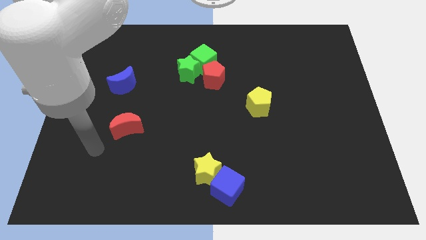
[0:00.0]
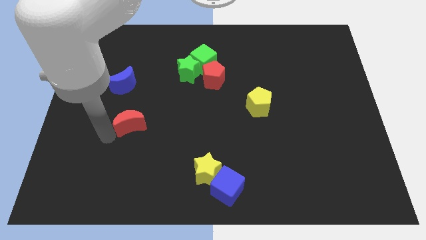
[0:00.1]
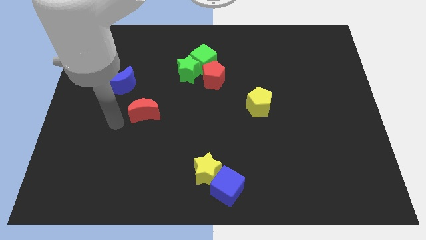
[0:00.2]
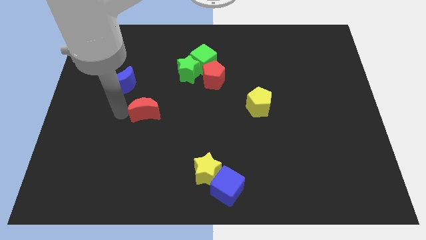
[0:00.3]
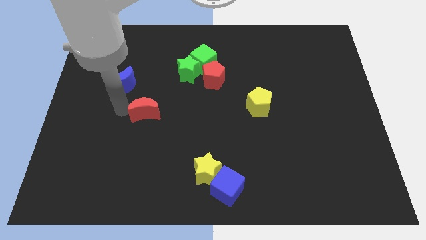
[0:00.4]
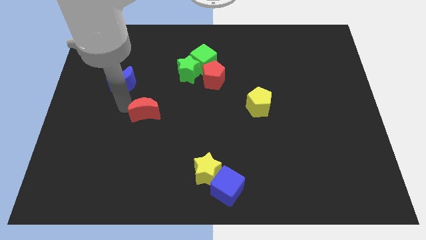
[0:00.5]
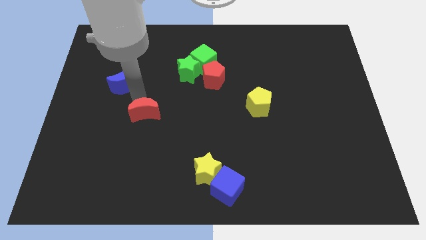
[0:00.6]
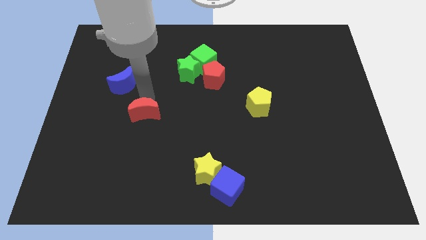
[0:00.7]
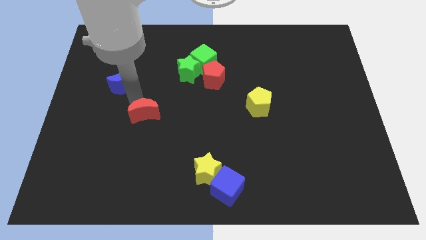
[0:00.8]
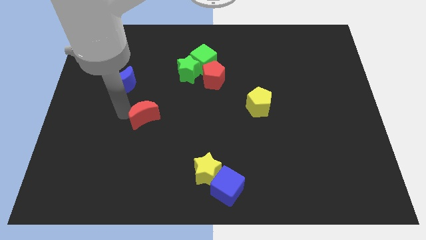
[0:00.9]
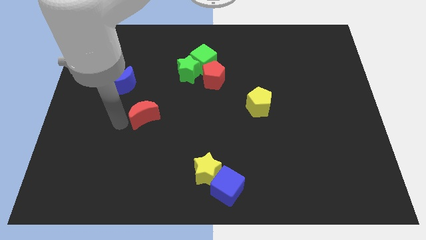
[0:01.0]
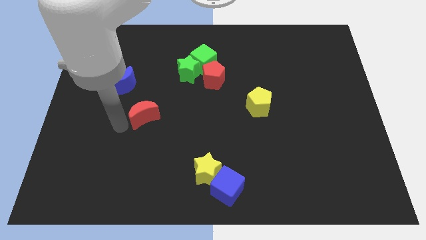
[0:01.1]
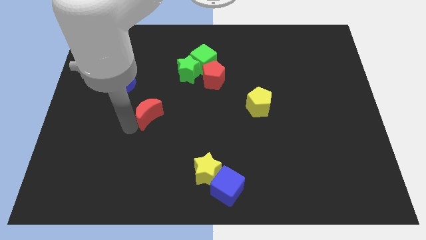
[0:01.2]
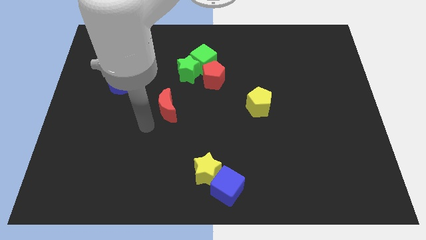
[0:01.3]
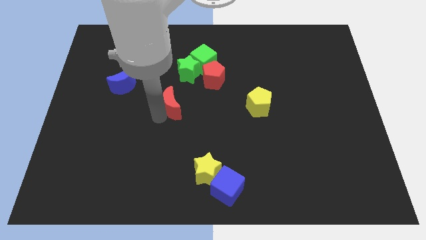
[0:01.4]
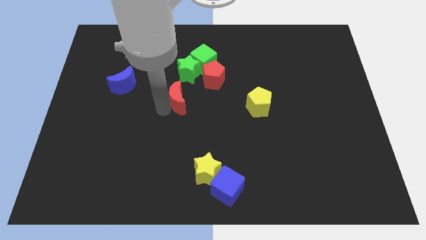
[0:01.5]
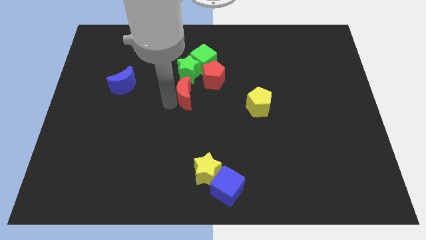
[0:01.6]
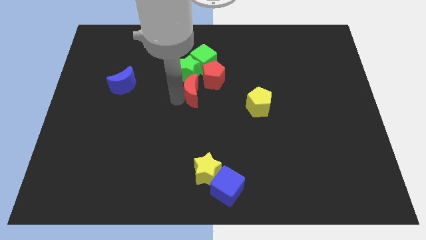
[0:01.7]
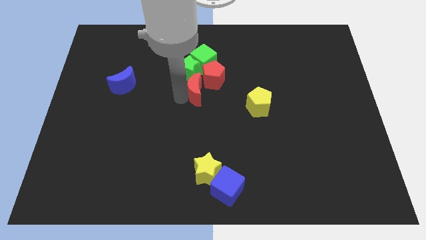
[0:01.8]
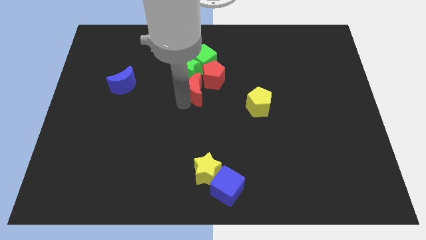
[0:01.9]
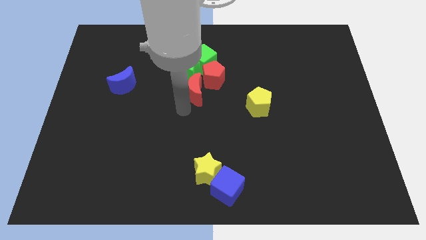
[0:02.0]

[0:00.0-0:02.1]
push the red crescent close to the red pentagon

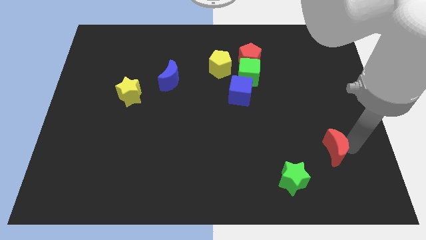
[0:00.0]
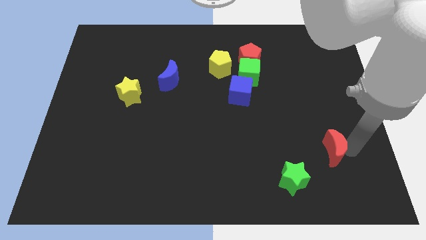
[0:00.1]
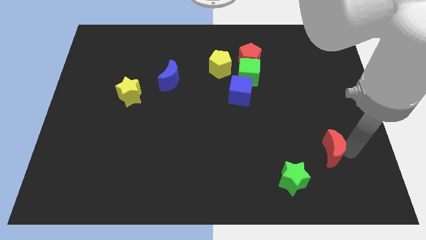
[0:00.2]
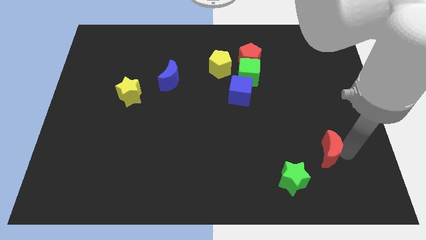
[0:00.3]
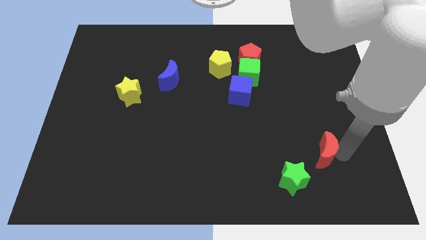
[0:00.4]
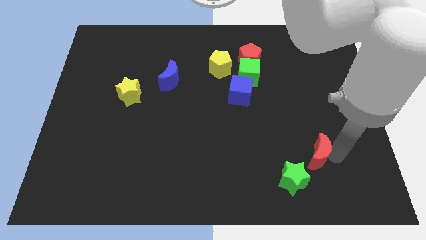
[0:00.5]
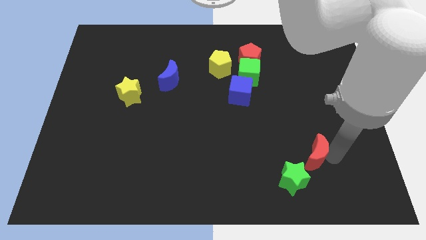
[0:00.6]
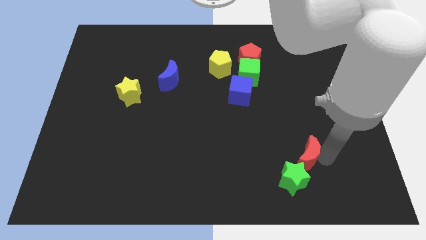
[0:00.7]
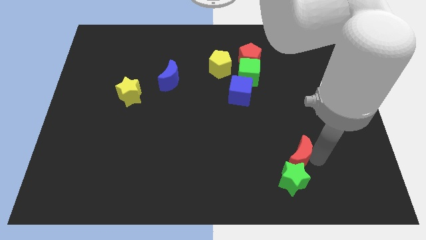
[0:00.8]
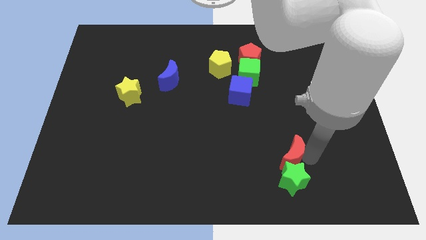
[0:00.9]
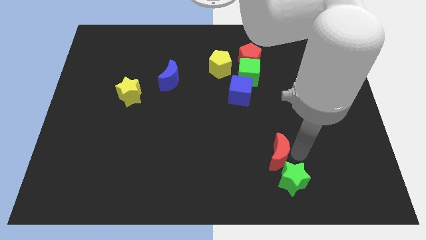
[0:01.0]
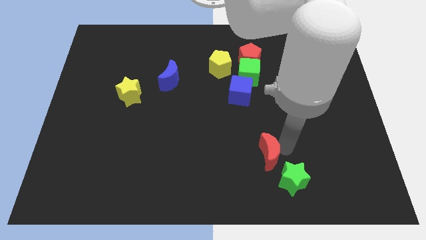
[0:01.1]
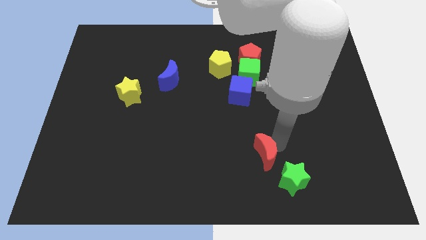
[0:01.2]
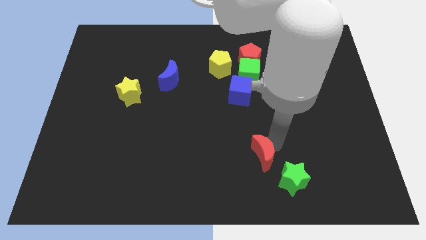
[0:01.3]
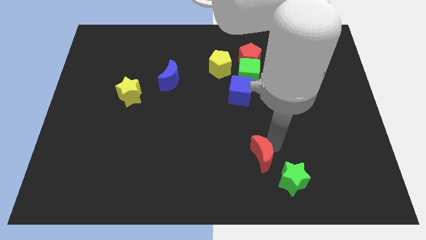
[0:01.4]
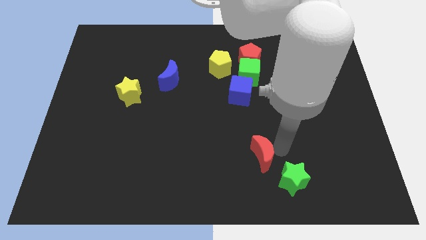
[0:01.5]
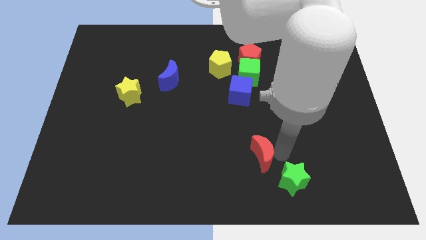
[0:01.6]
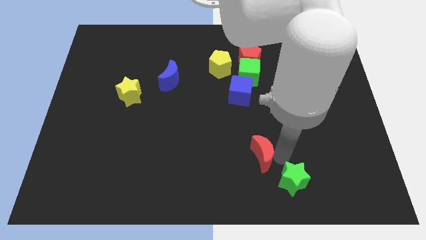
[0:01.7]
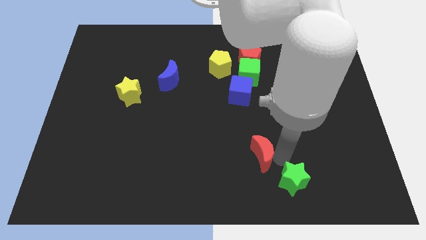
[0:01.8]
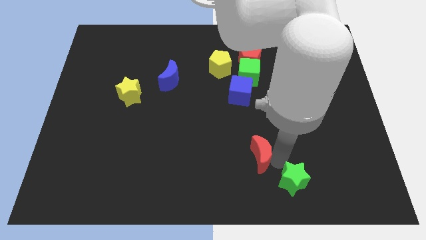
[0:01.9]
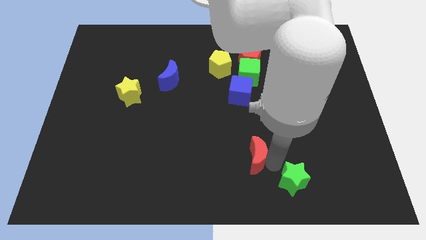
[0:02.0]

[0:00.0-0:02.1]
move the red moon below the blue cube

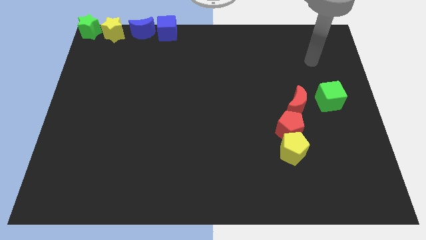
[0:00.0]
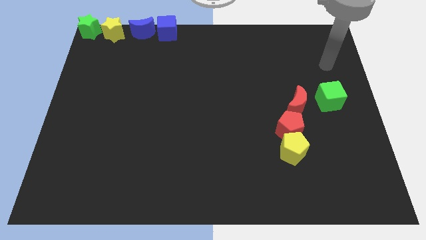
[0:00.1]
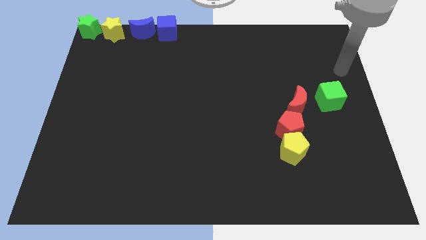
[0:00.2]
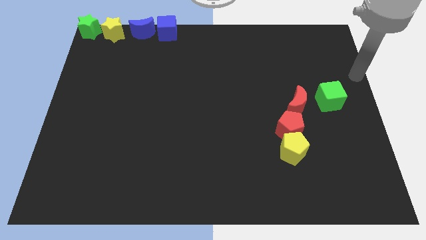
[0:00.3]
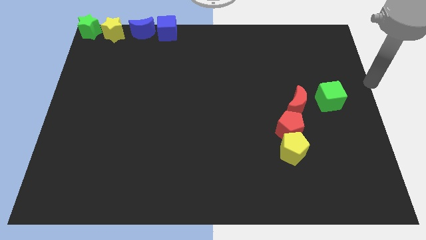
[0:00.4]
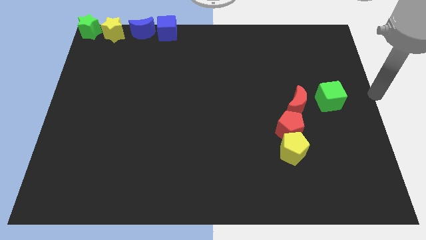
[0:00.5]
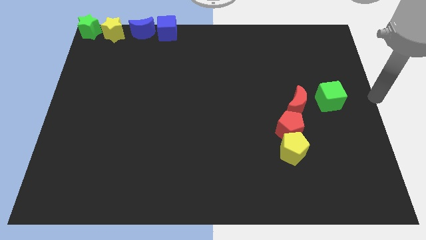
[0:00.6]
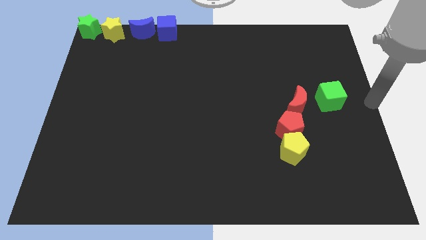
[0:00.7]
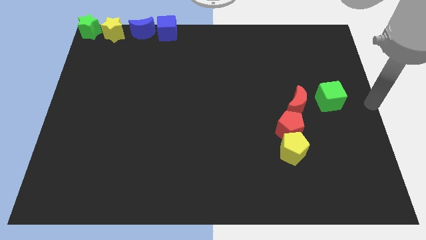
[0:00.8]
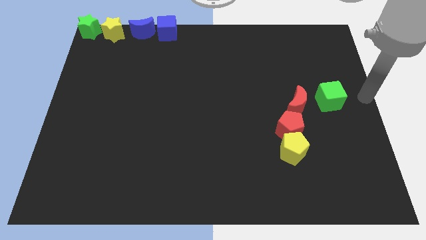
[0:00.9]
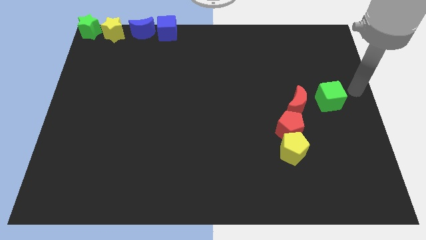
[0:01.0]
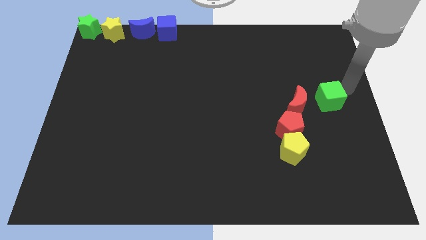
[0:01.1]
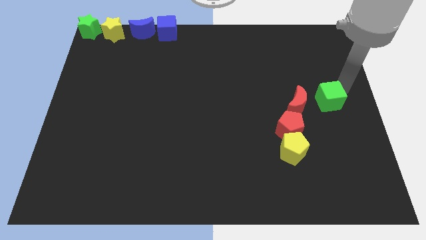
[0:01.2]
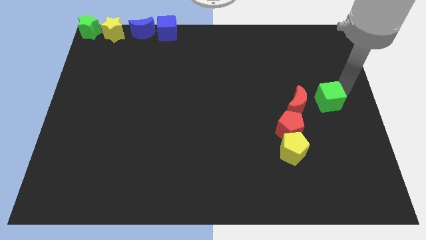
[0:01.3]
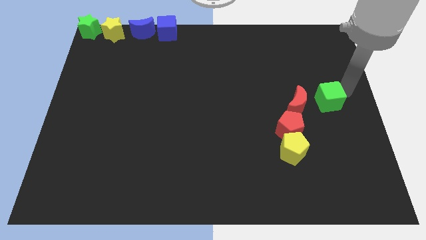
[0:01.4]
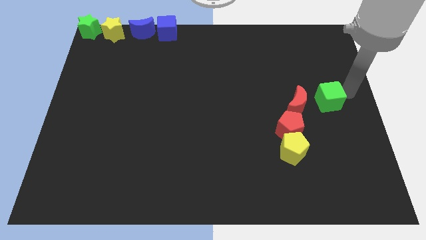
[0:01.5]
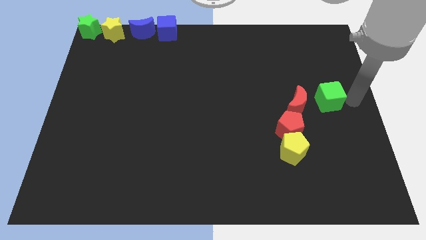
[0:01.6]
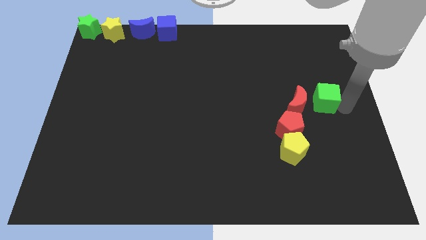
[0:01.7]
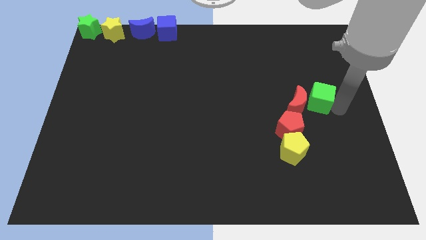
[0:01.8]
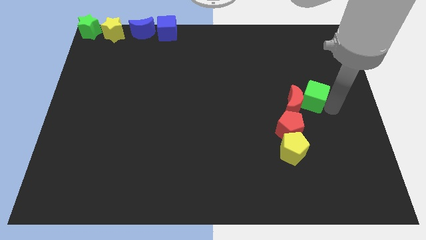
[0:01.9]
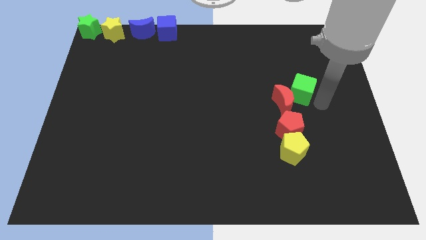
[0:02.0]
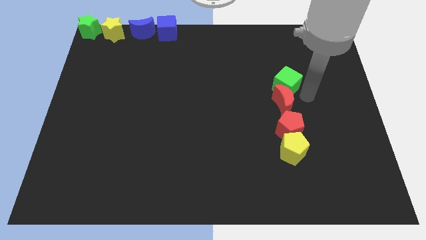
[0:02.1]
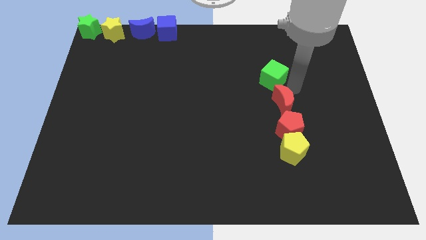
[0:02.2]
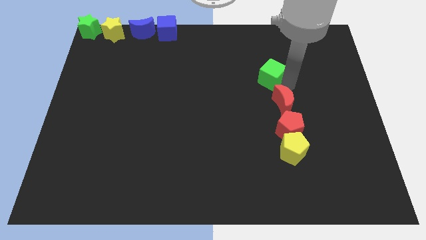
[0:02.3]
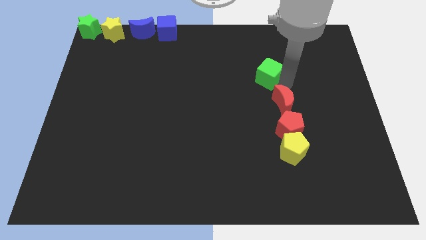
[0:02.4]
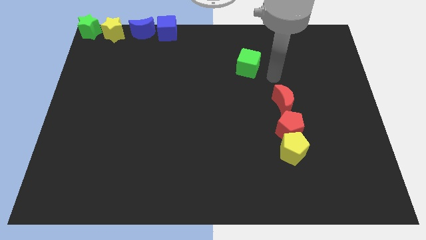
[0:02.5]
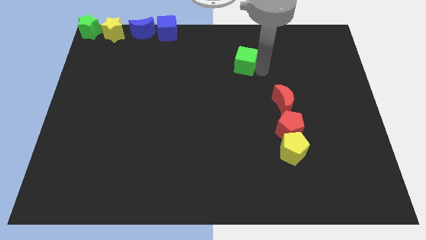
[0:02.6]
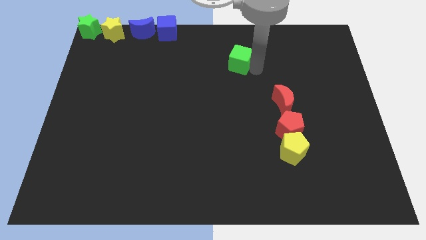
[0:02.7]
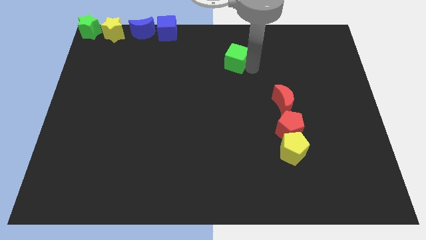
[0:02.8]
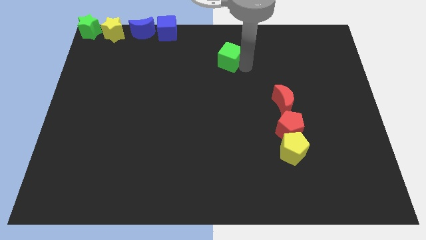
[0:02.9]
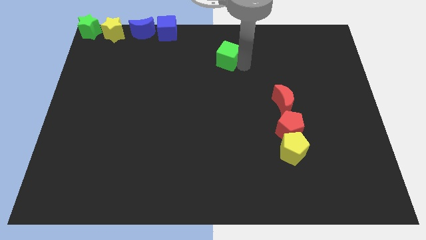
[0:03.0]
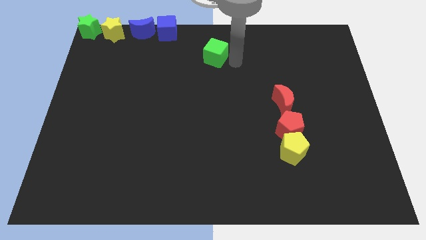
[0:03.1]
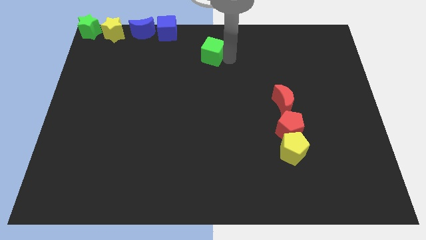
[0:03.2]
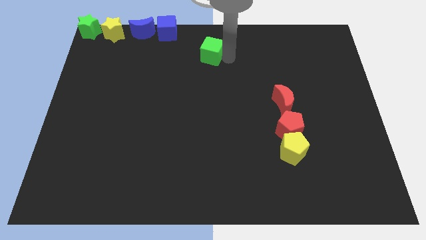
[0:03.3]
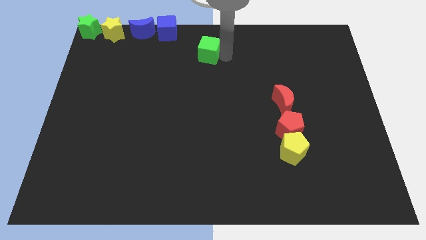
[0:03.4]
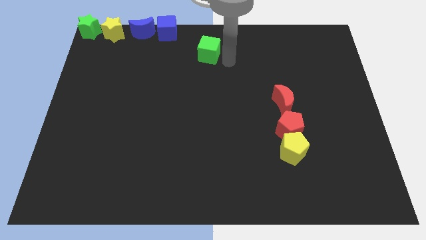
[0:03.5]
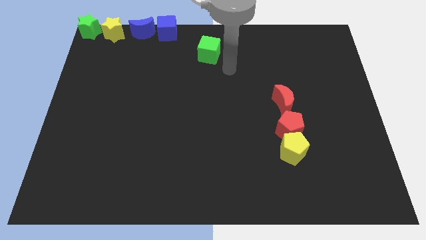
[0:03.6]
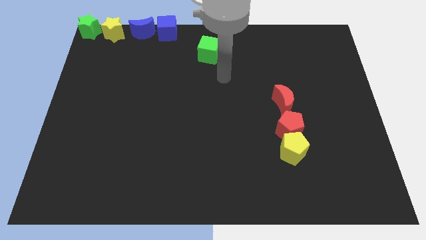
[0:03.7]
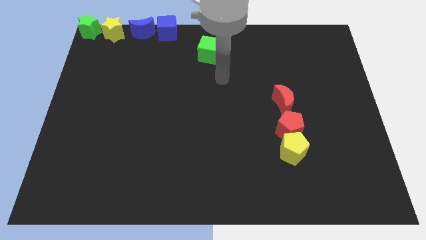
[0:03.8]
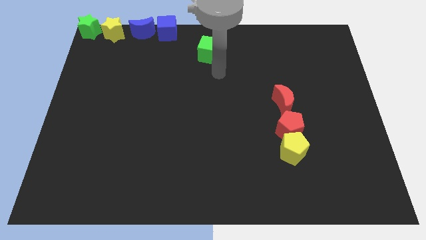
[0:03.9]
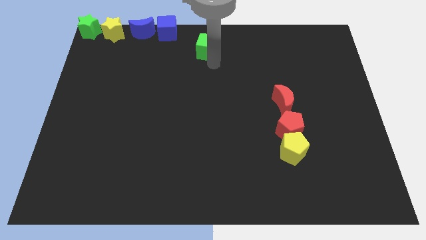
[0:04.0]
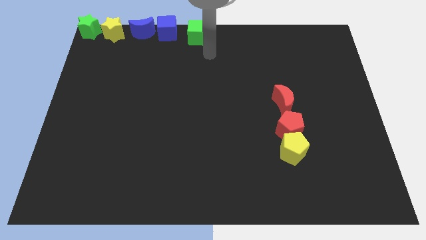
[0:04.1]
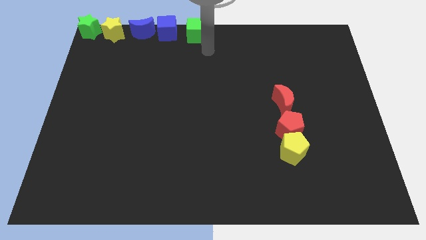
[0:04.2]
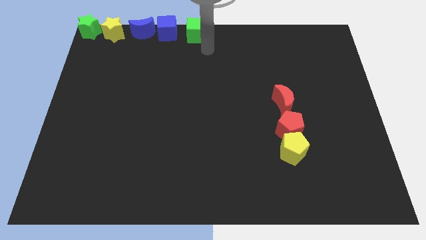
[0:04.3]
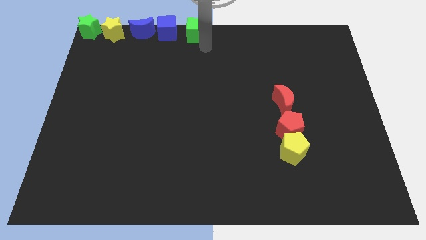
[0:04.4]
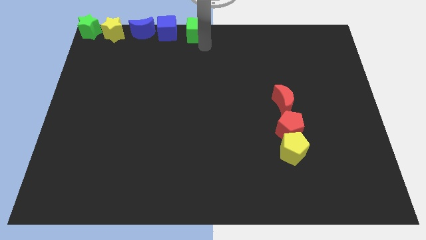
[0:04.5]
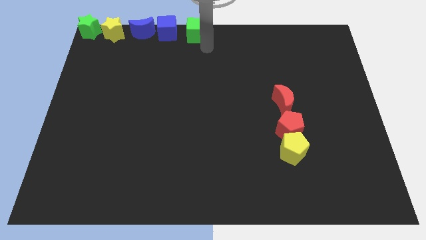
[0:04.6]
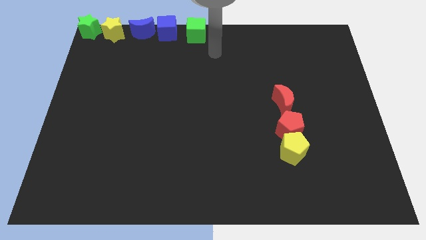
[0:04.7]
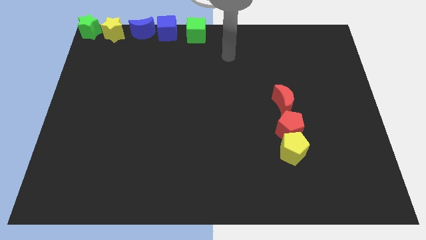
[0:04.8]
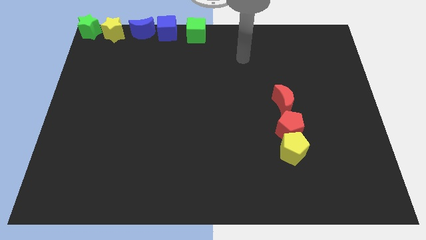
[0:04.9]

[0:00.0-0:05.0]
push the green cube to the right side of the blue cube
